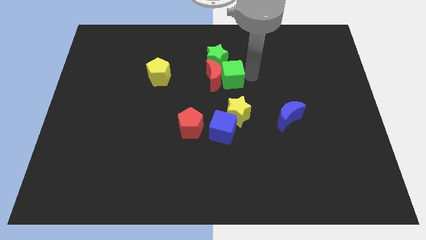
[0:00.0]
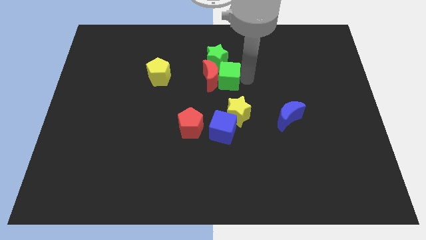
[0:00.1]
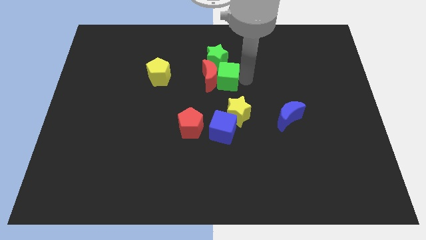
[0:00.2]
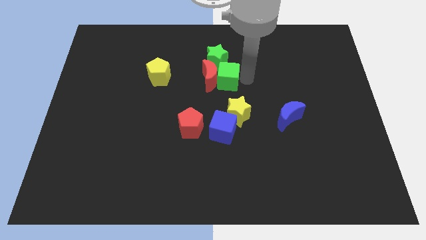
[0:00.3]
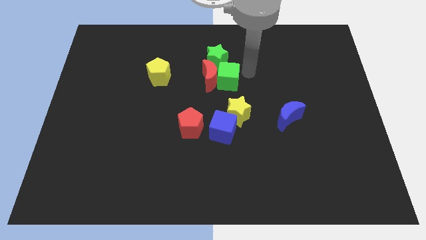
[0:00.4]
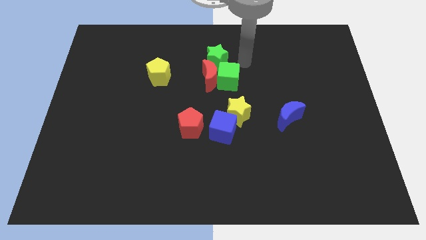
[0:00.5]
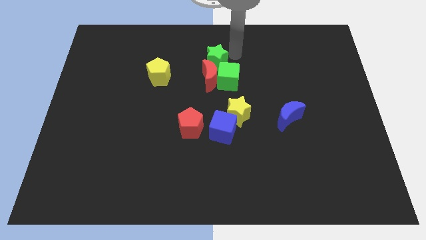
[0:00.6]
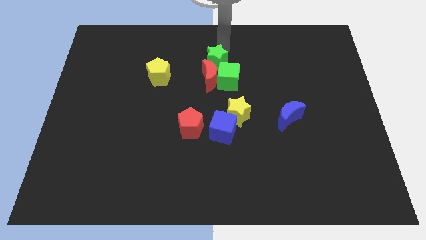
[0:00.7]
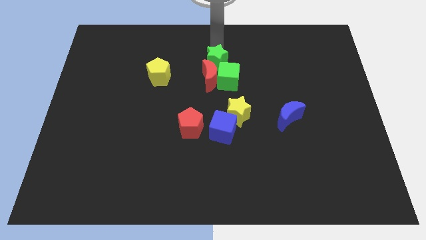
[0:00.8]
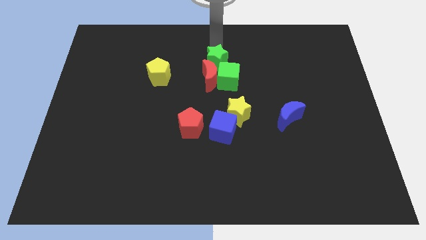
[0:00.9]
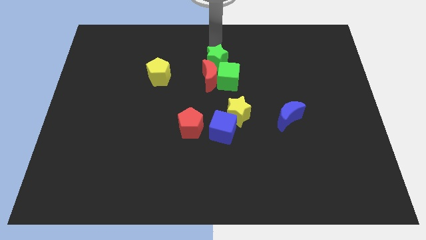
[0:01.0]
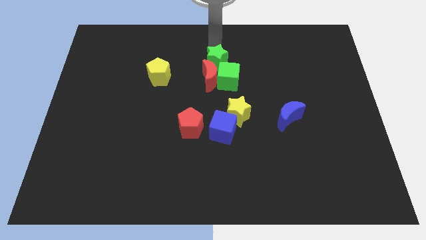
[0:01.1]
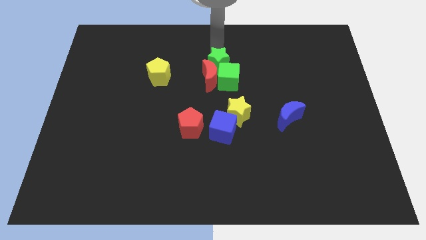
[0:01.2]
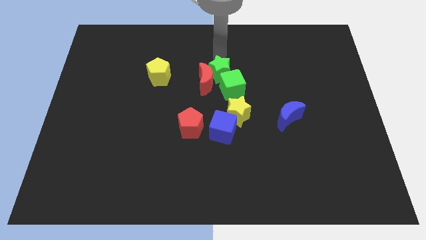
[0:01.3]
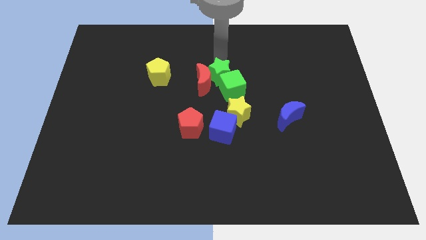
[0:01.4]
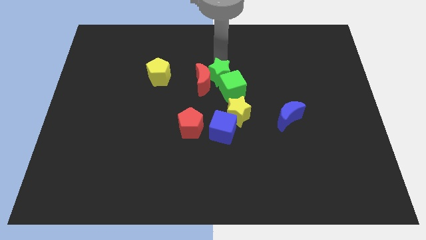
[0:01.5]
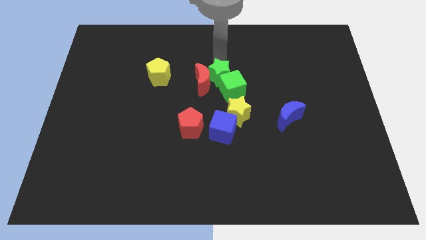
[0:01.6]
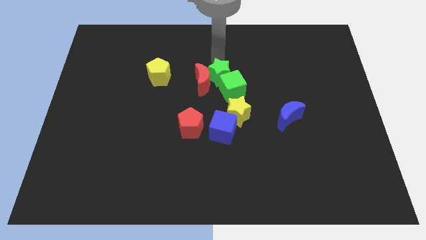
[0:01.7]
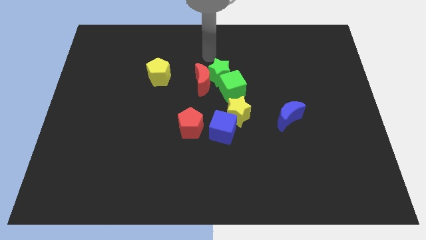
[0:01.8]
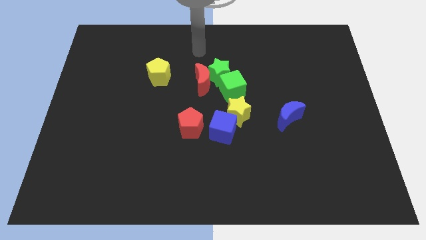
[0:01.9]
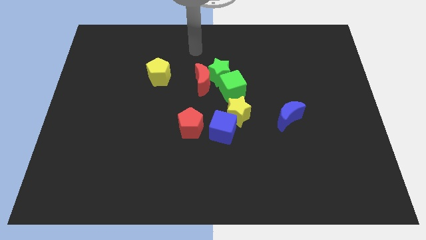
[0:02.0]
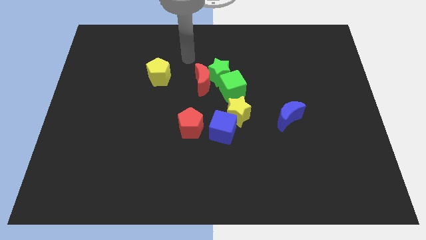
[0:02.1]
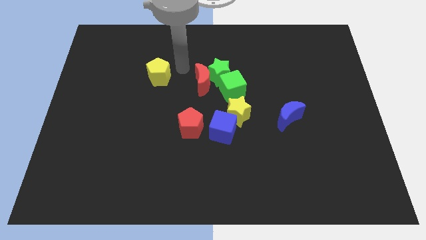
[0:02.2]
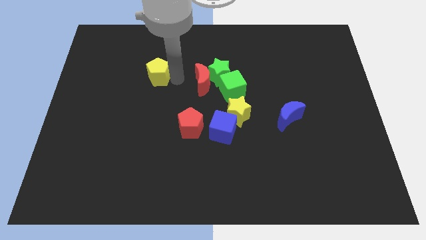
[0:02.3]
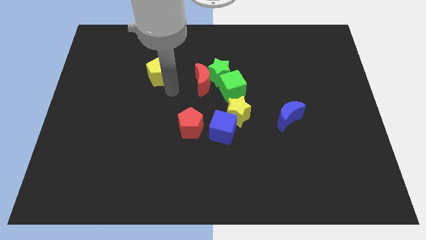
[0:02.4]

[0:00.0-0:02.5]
push the green star into the green cube and red crescent from the top

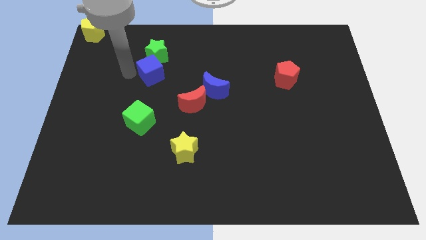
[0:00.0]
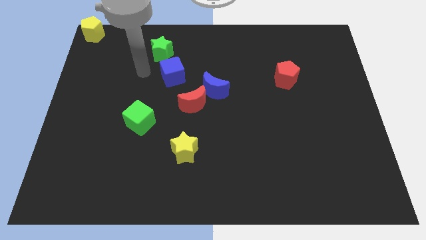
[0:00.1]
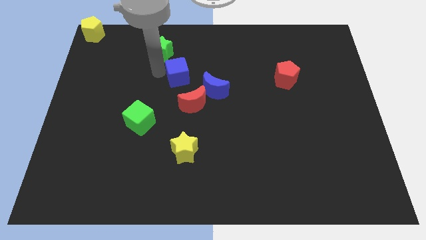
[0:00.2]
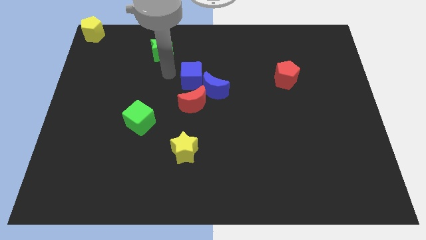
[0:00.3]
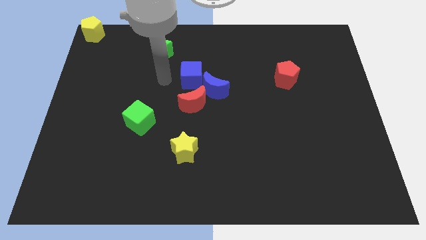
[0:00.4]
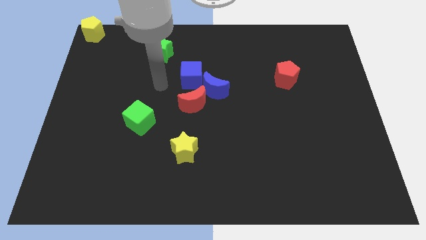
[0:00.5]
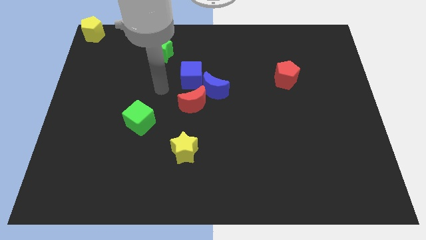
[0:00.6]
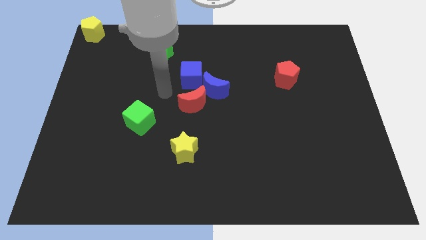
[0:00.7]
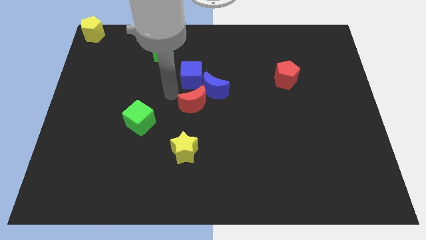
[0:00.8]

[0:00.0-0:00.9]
push the blue cube diagonally to the top left of the blue crescent

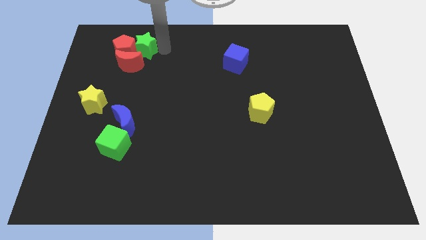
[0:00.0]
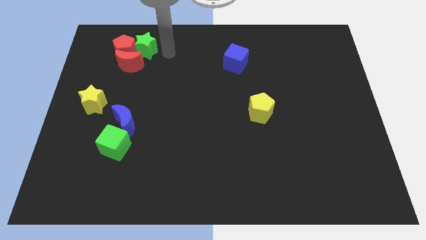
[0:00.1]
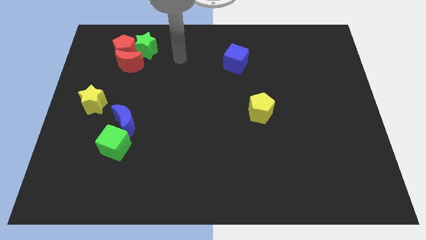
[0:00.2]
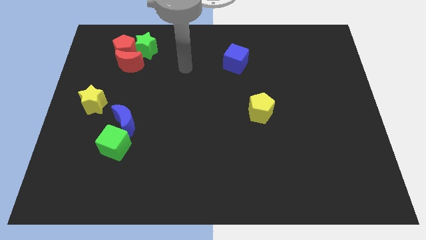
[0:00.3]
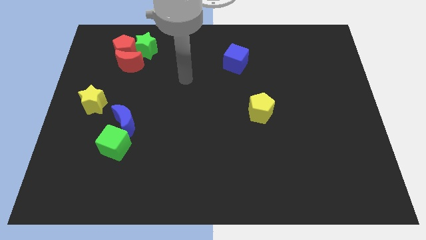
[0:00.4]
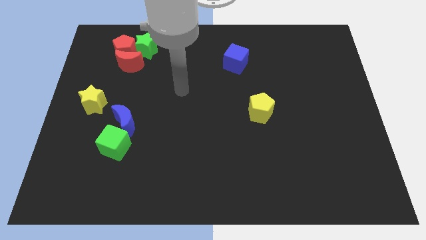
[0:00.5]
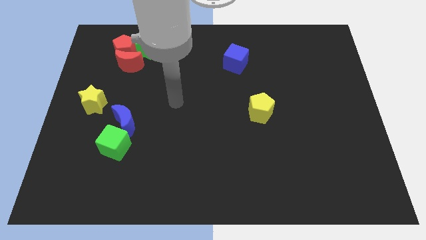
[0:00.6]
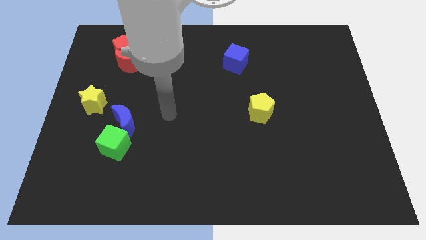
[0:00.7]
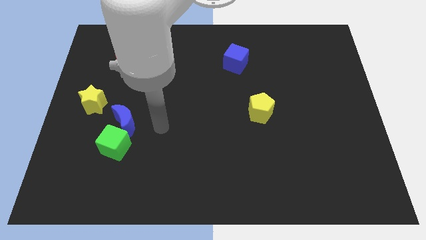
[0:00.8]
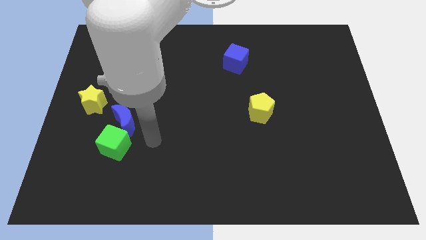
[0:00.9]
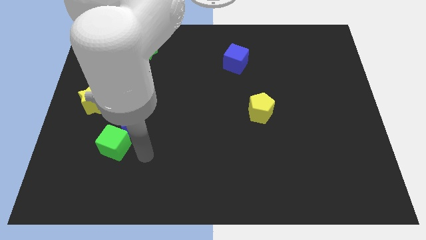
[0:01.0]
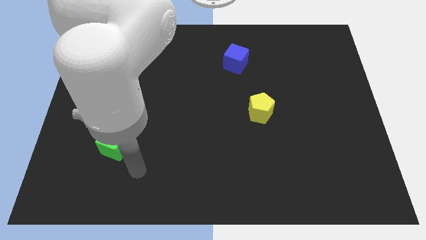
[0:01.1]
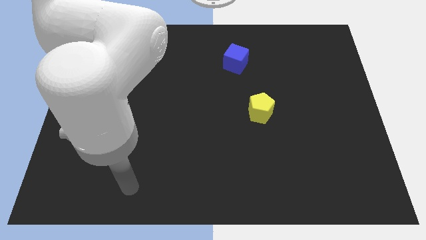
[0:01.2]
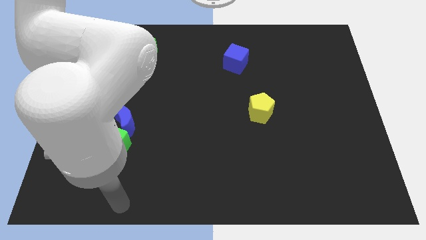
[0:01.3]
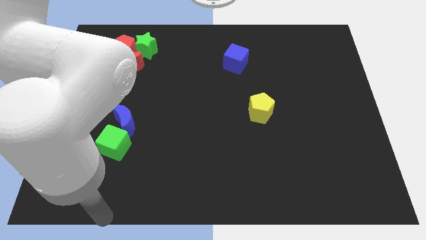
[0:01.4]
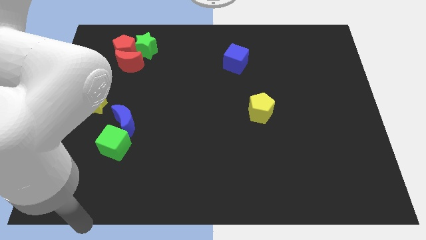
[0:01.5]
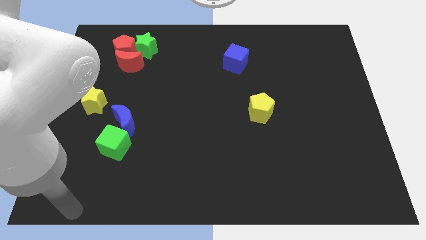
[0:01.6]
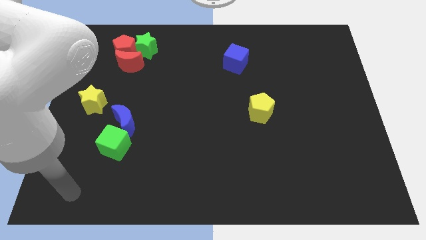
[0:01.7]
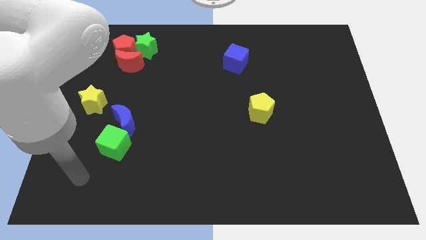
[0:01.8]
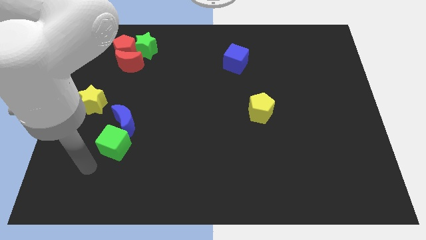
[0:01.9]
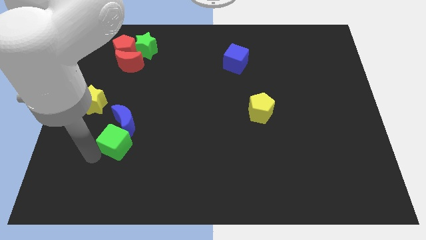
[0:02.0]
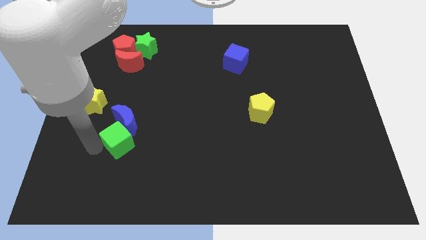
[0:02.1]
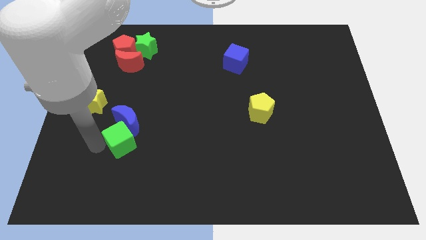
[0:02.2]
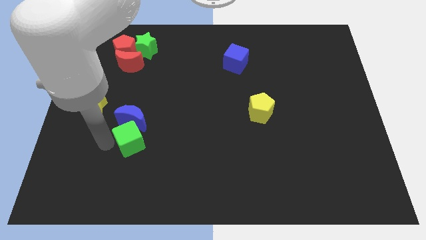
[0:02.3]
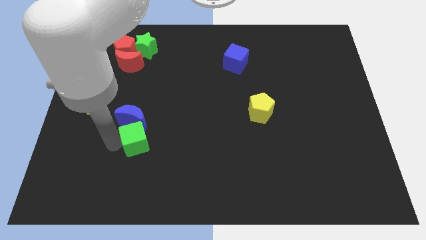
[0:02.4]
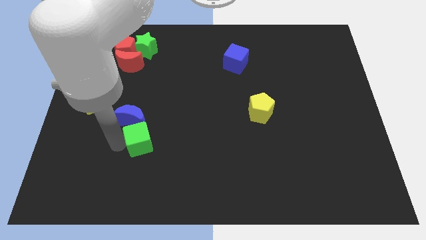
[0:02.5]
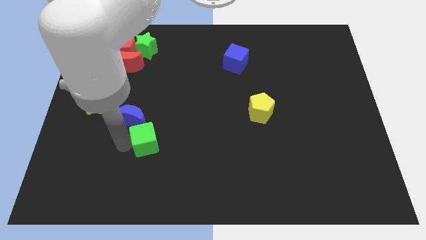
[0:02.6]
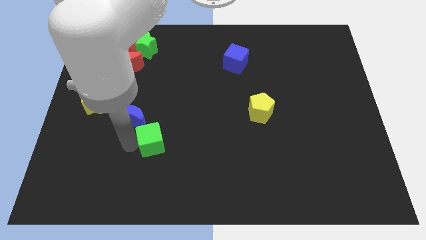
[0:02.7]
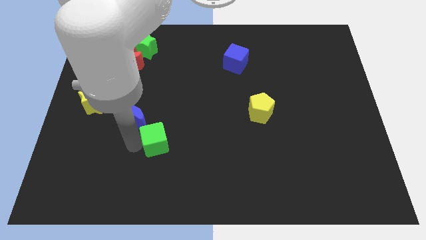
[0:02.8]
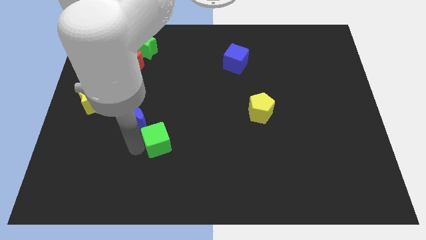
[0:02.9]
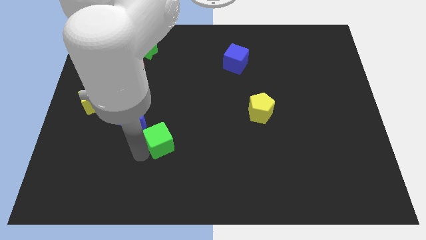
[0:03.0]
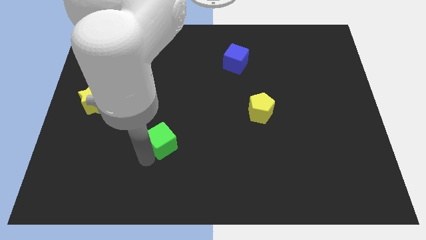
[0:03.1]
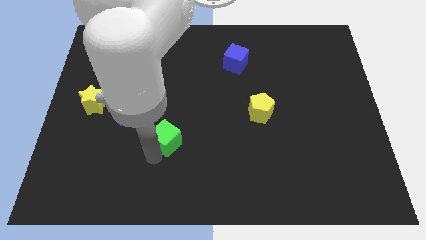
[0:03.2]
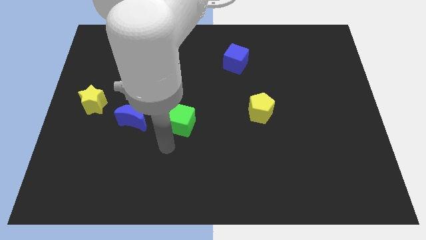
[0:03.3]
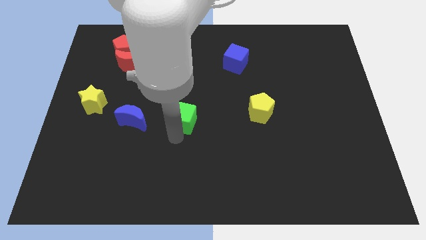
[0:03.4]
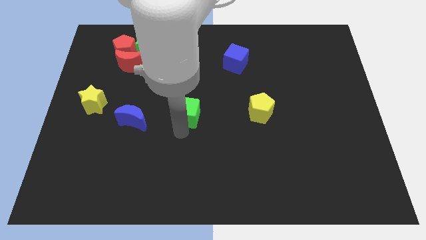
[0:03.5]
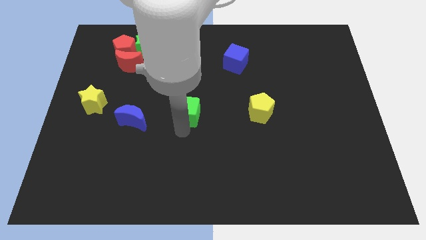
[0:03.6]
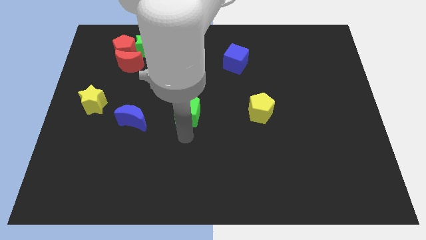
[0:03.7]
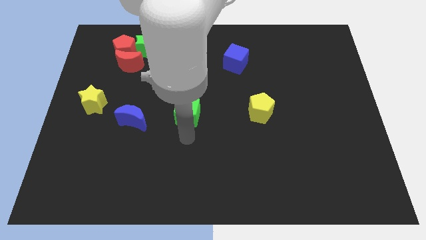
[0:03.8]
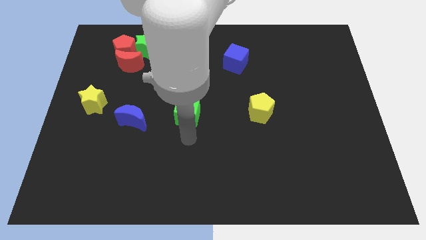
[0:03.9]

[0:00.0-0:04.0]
place the green cube at the center of the board

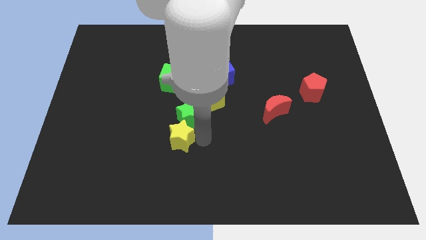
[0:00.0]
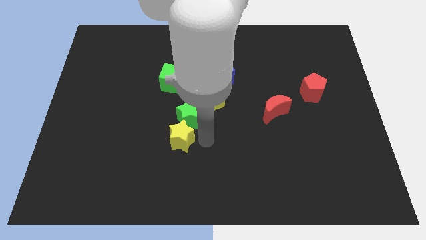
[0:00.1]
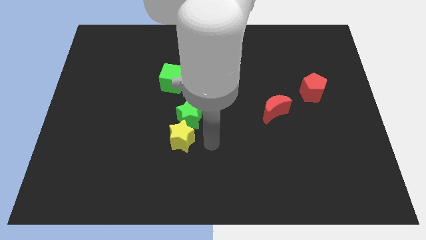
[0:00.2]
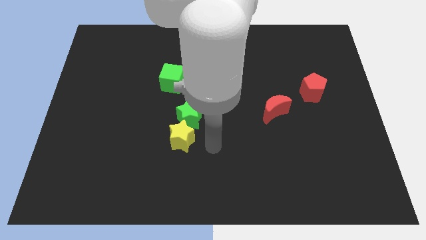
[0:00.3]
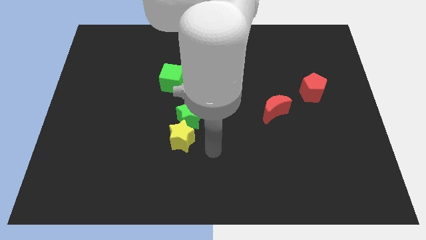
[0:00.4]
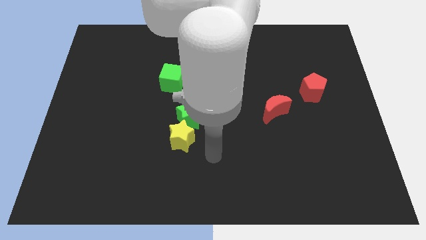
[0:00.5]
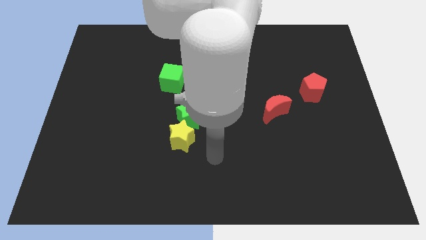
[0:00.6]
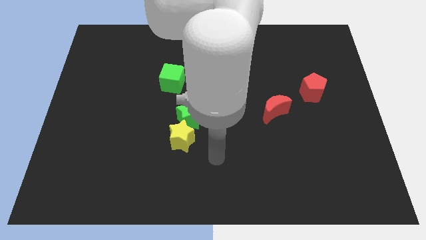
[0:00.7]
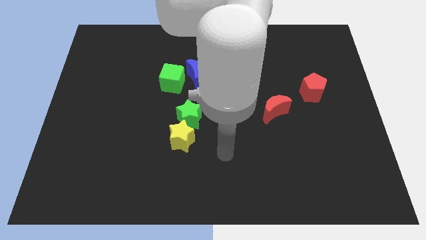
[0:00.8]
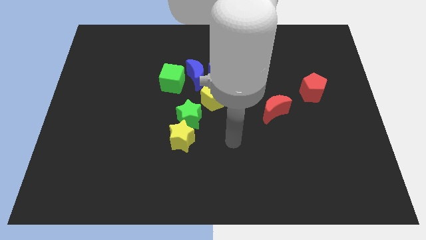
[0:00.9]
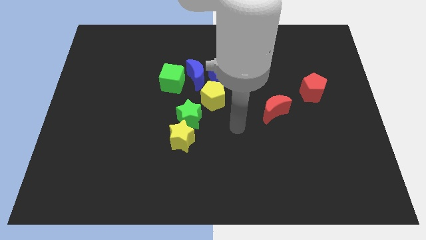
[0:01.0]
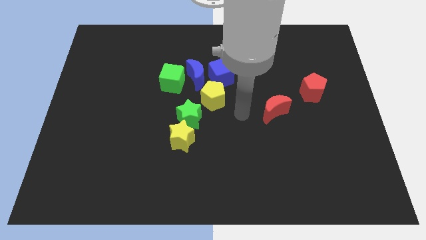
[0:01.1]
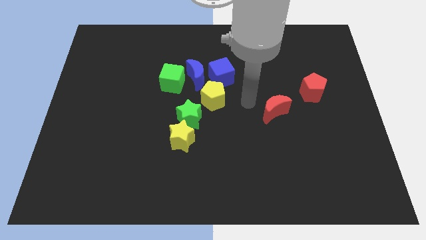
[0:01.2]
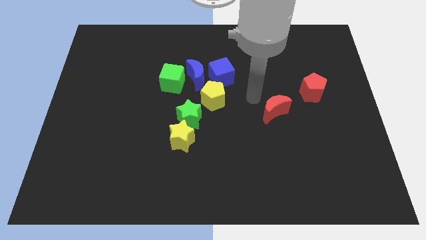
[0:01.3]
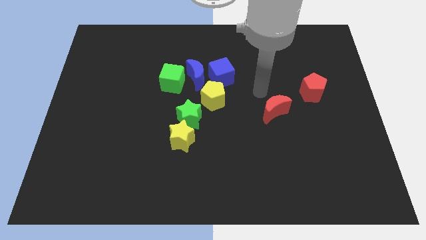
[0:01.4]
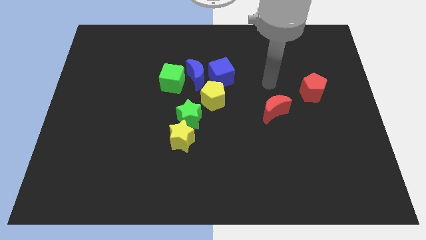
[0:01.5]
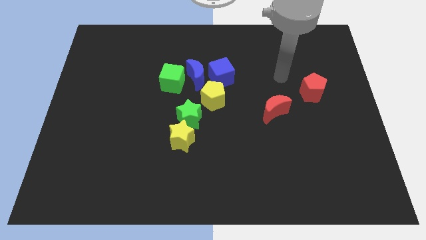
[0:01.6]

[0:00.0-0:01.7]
move your hand away from the yellow star
